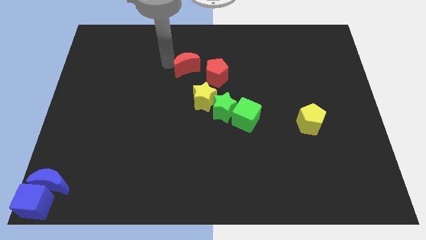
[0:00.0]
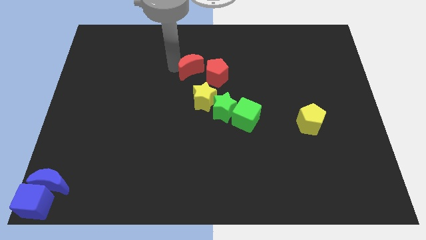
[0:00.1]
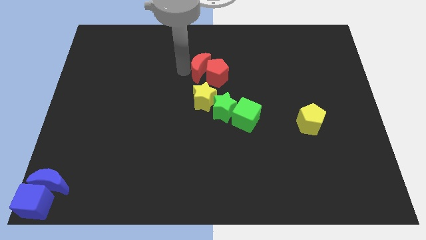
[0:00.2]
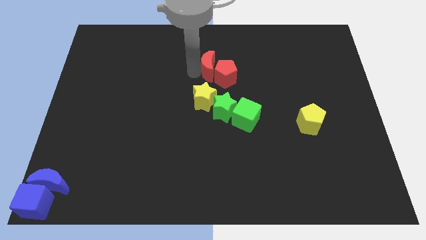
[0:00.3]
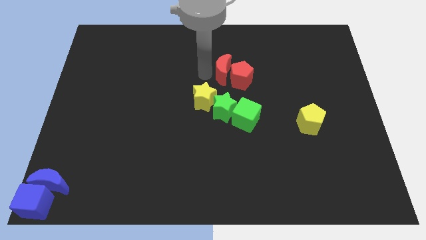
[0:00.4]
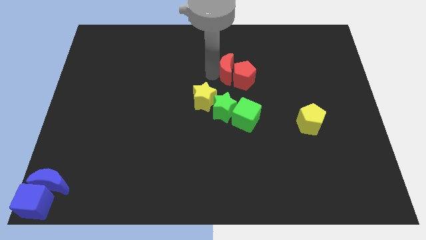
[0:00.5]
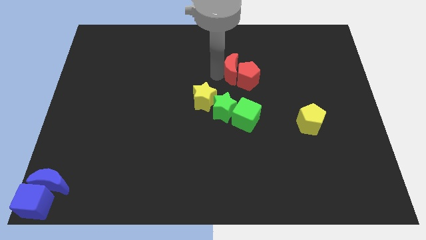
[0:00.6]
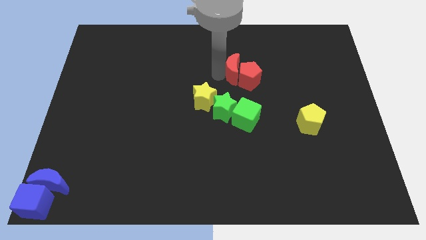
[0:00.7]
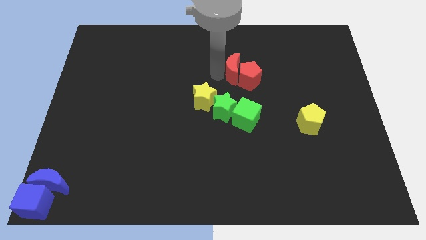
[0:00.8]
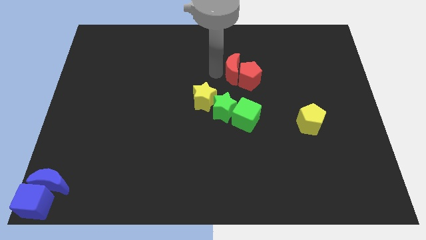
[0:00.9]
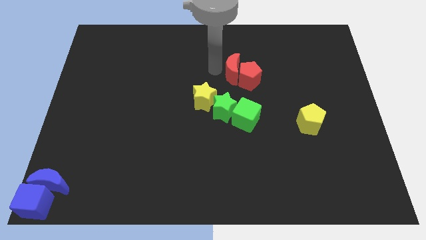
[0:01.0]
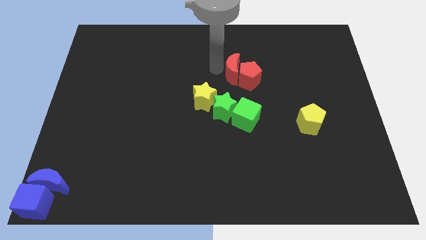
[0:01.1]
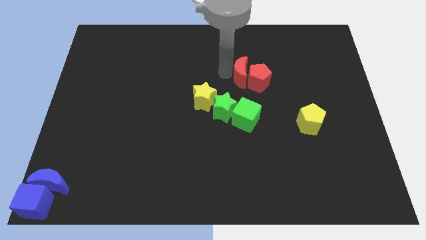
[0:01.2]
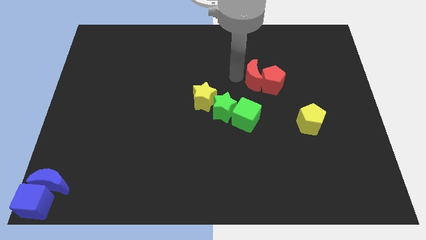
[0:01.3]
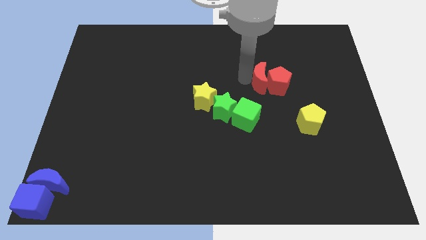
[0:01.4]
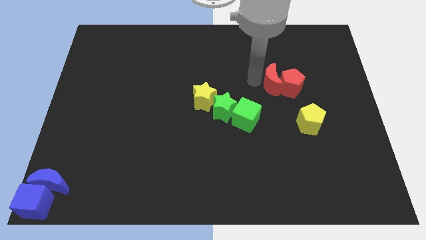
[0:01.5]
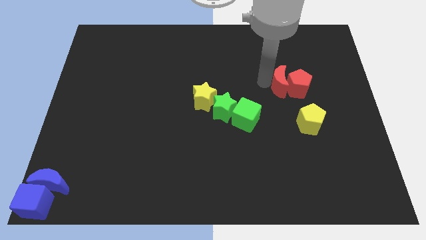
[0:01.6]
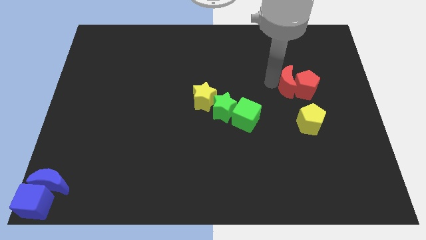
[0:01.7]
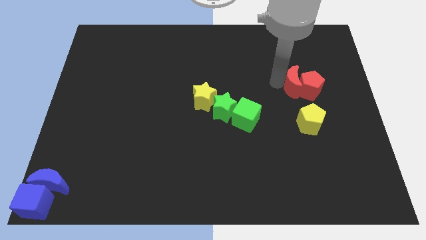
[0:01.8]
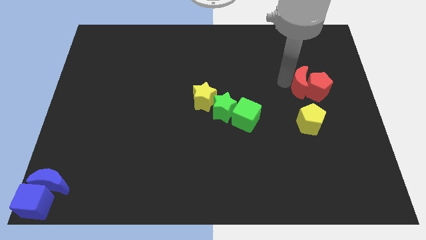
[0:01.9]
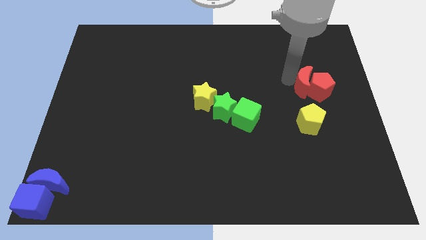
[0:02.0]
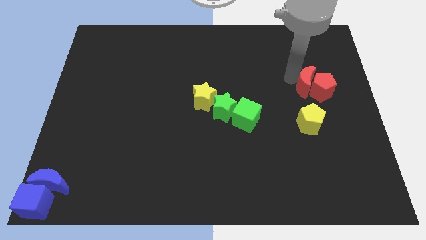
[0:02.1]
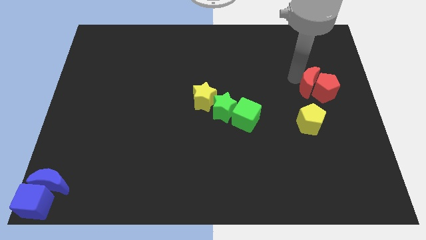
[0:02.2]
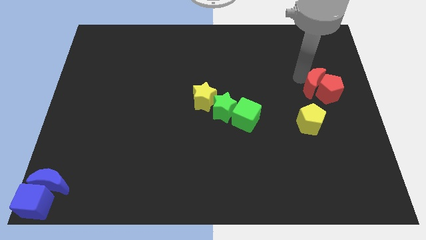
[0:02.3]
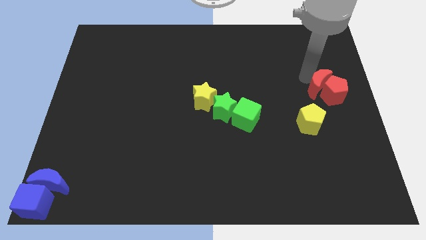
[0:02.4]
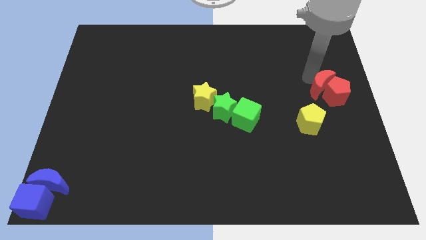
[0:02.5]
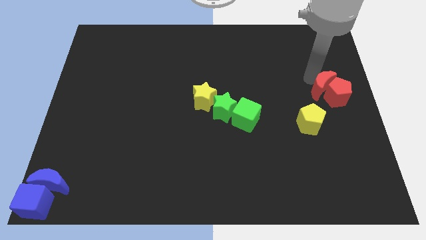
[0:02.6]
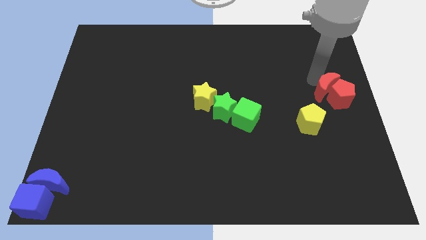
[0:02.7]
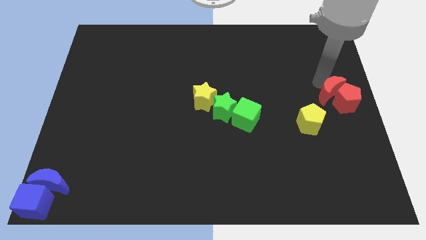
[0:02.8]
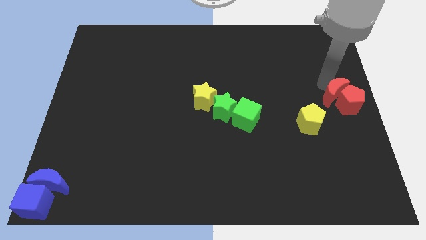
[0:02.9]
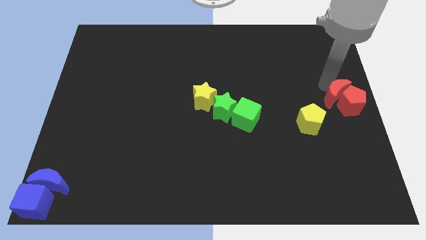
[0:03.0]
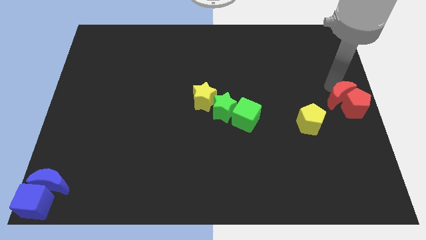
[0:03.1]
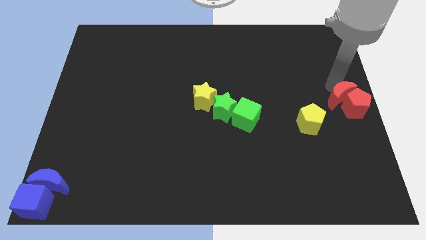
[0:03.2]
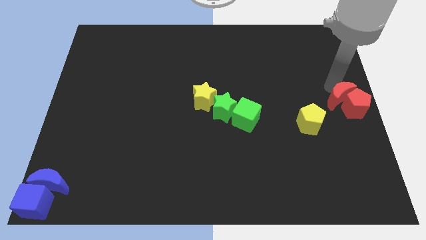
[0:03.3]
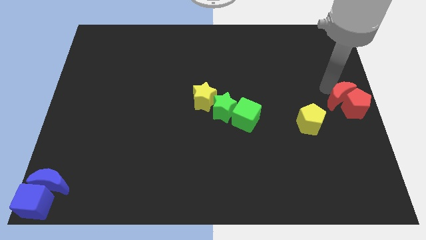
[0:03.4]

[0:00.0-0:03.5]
push both the red blocks to the center right side of the board

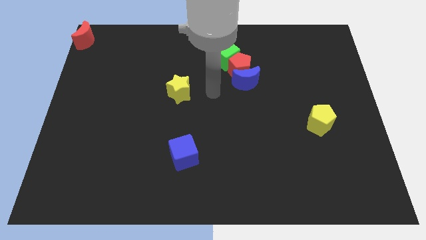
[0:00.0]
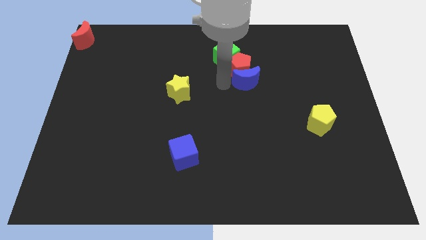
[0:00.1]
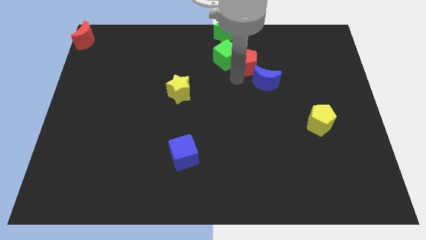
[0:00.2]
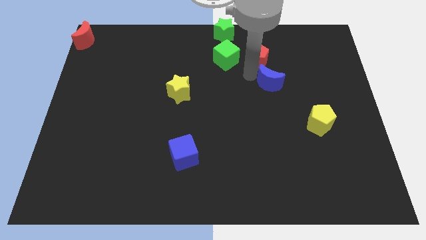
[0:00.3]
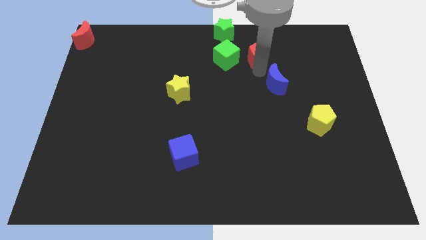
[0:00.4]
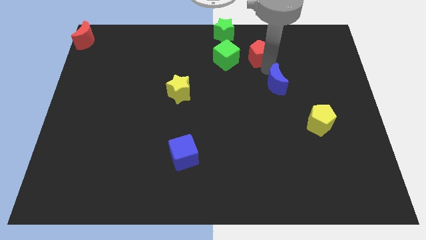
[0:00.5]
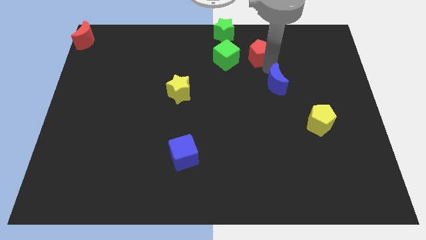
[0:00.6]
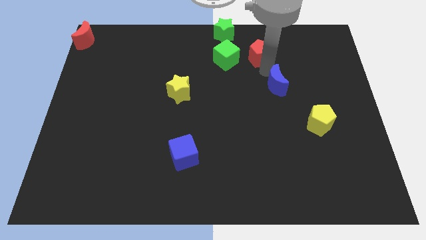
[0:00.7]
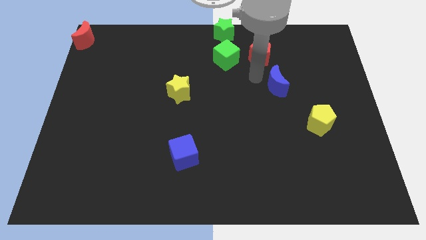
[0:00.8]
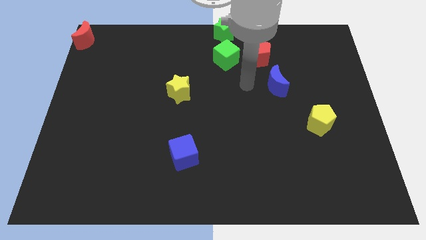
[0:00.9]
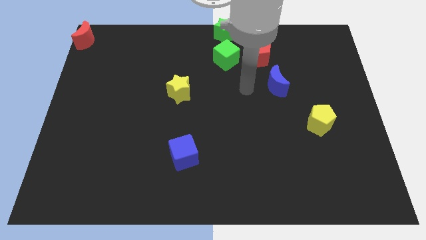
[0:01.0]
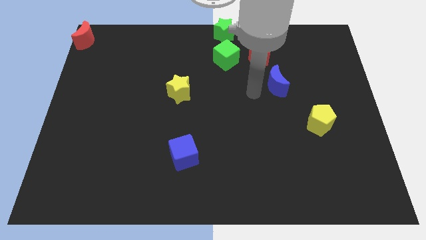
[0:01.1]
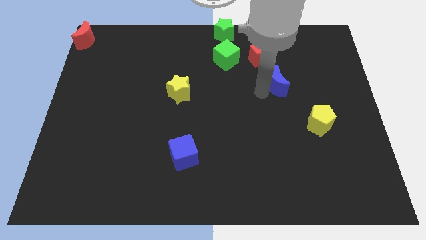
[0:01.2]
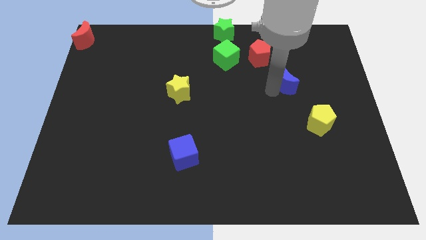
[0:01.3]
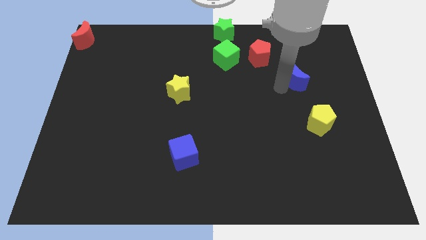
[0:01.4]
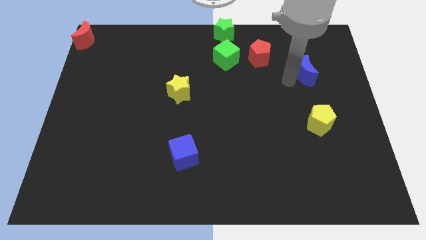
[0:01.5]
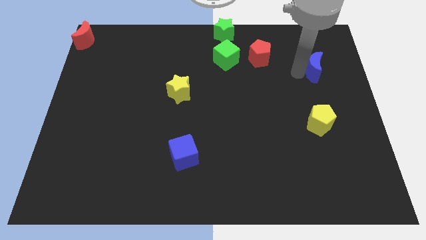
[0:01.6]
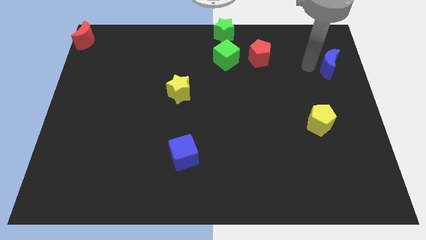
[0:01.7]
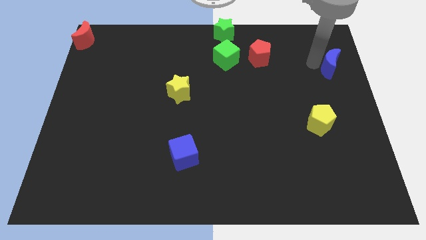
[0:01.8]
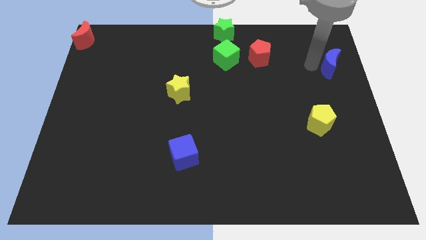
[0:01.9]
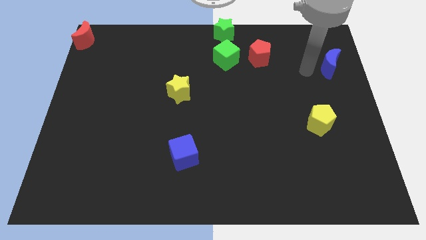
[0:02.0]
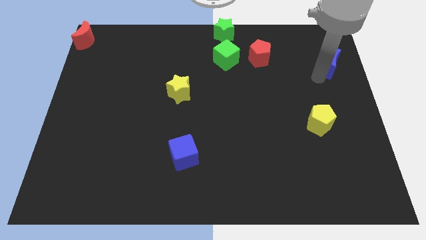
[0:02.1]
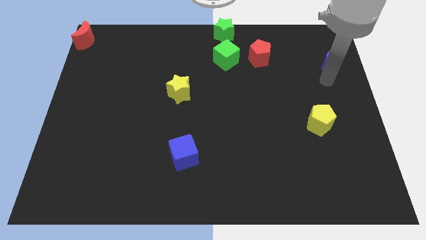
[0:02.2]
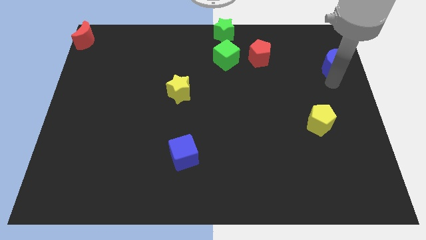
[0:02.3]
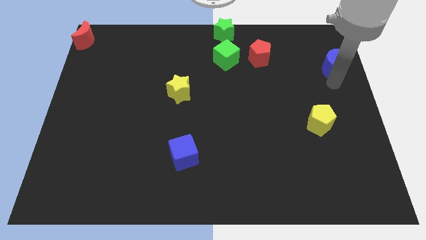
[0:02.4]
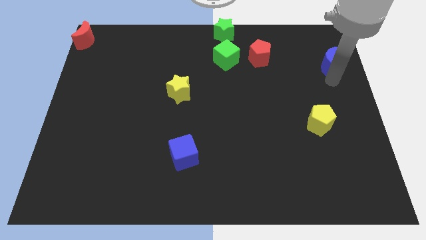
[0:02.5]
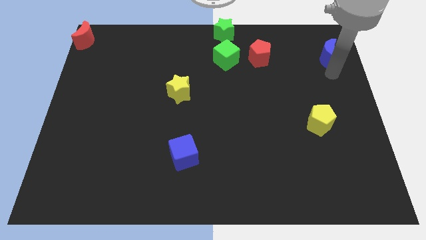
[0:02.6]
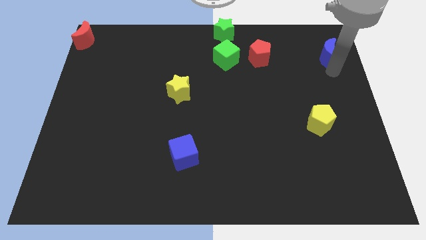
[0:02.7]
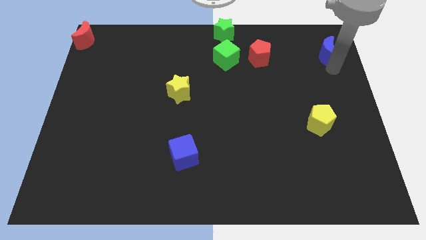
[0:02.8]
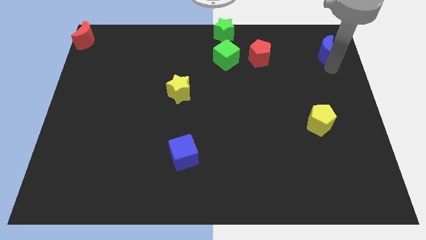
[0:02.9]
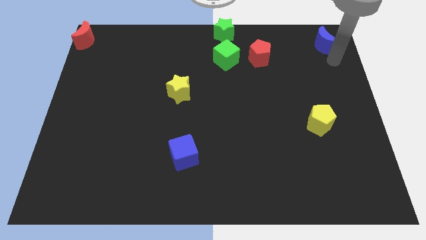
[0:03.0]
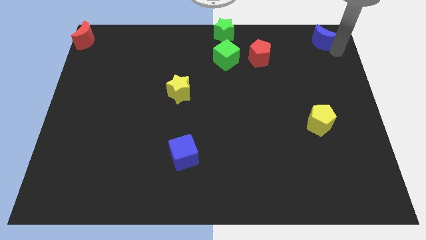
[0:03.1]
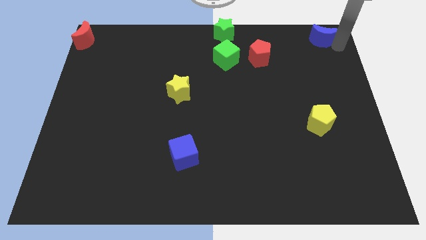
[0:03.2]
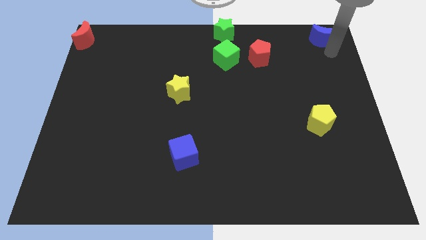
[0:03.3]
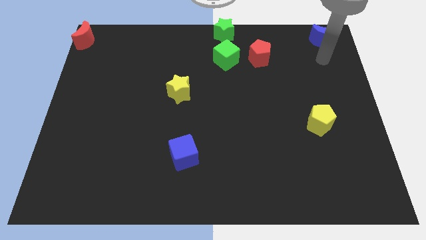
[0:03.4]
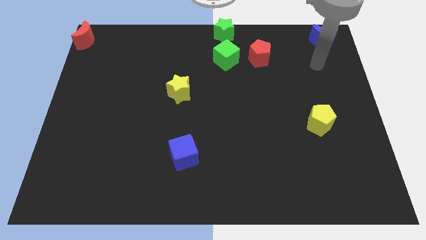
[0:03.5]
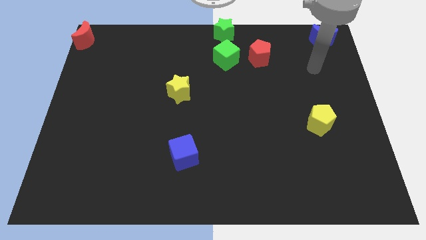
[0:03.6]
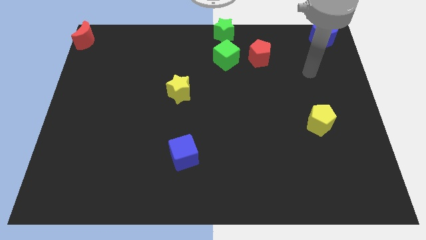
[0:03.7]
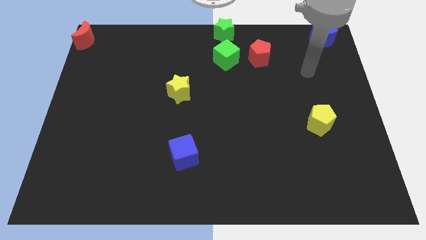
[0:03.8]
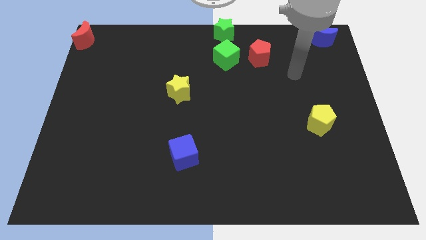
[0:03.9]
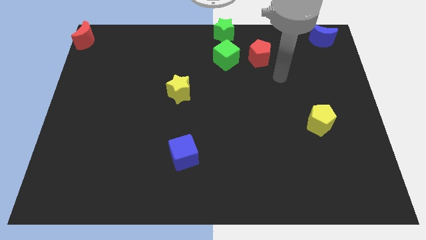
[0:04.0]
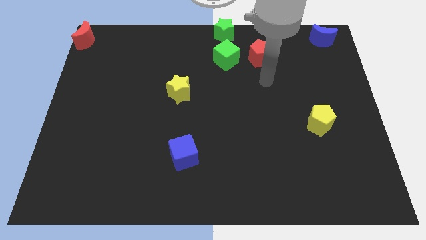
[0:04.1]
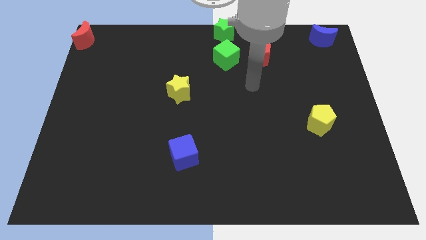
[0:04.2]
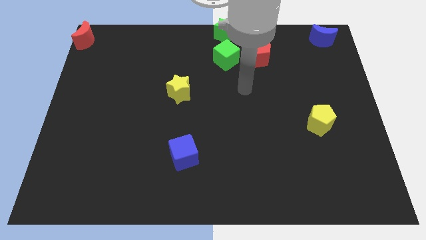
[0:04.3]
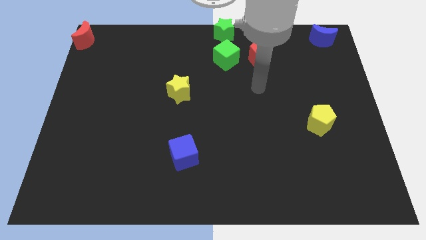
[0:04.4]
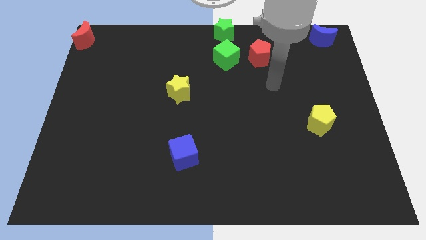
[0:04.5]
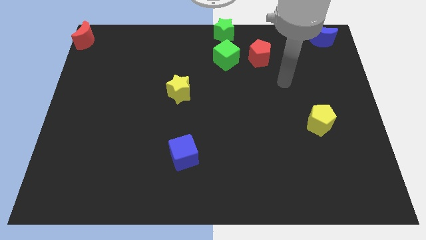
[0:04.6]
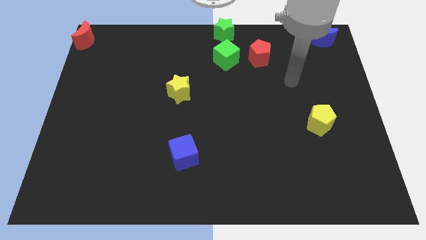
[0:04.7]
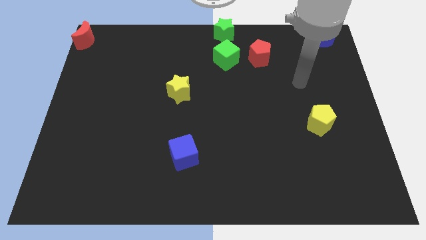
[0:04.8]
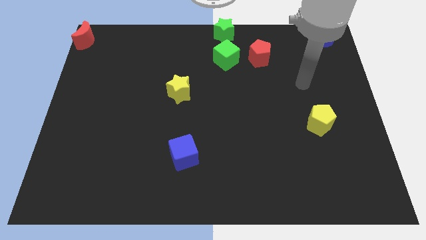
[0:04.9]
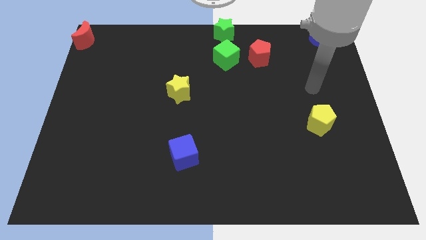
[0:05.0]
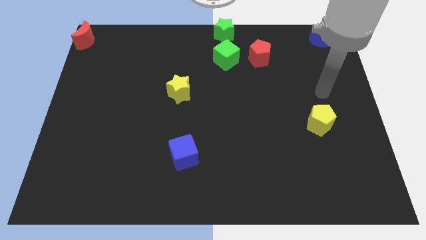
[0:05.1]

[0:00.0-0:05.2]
slide the blue crescent to the top right corner

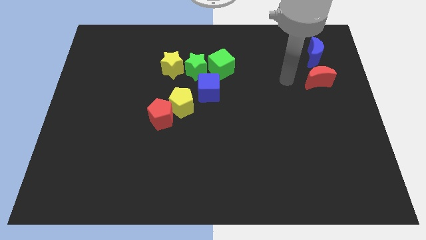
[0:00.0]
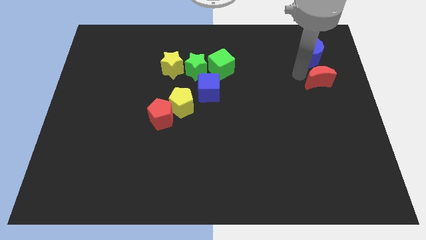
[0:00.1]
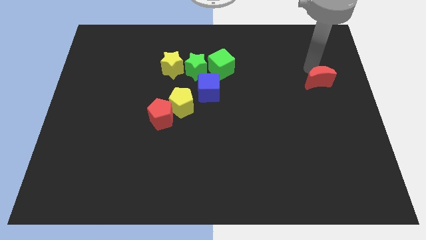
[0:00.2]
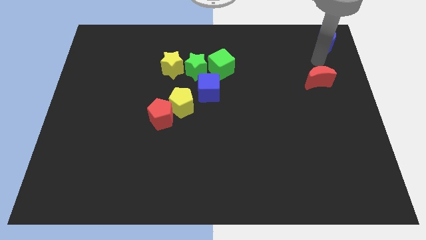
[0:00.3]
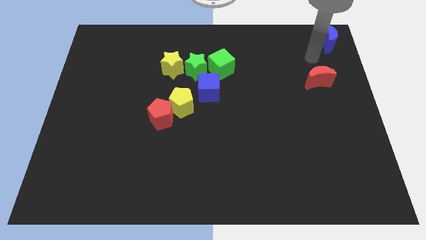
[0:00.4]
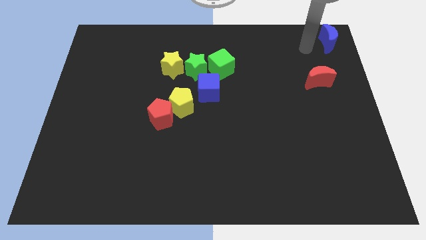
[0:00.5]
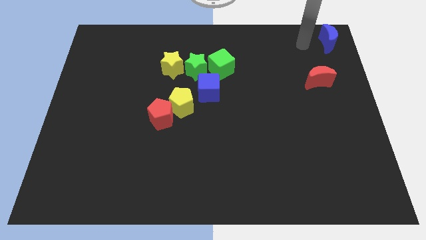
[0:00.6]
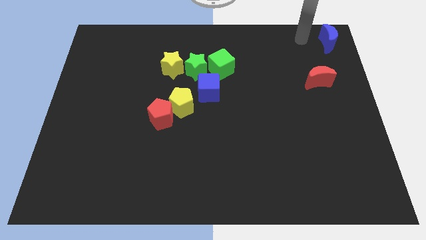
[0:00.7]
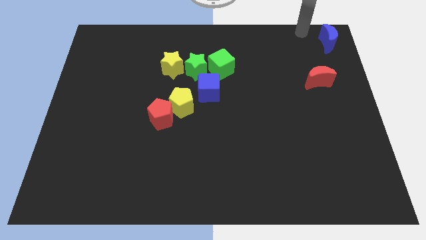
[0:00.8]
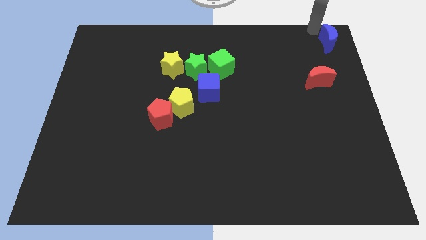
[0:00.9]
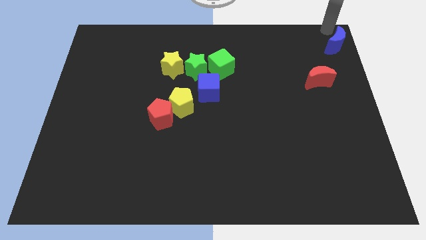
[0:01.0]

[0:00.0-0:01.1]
separate blue moon and red moon
